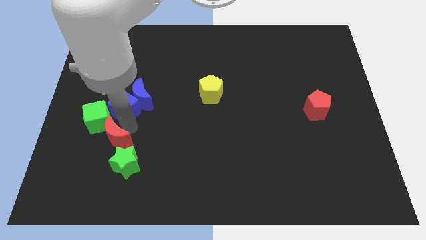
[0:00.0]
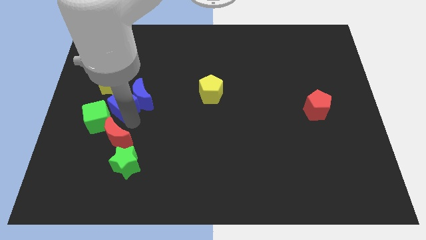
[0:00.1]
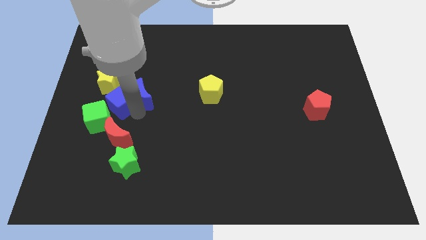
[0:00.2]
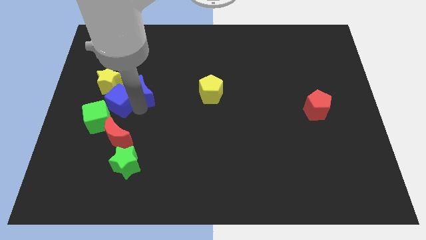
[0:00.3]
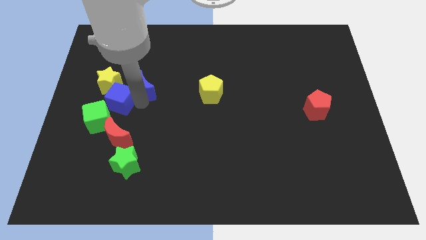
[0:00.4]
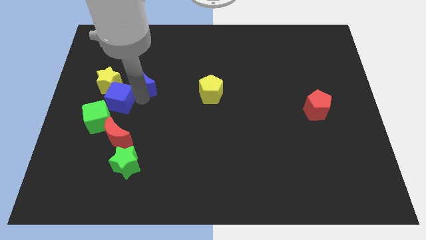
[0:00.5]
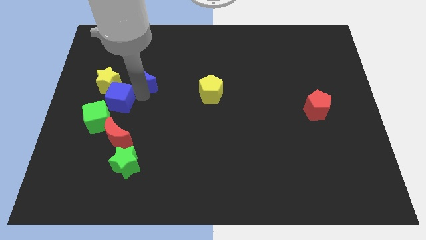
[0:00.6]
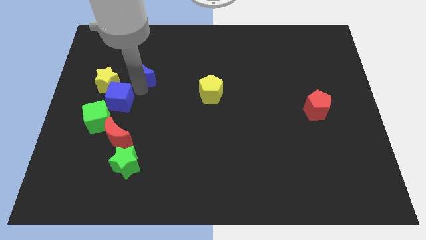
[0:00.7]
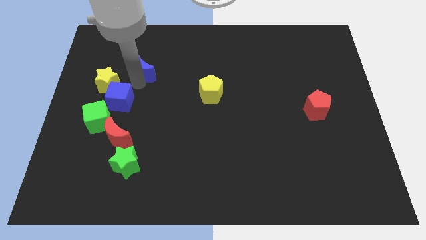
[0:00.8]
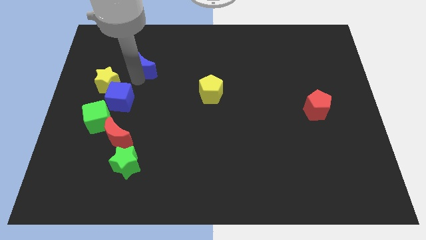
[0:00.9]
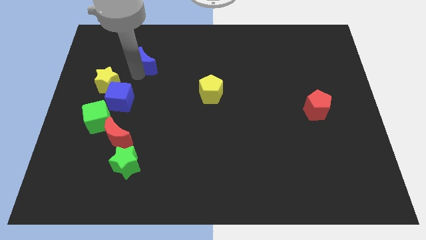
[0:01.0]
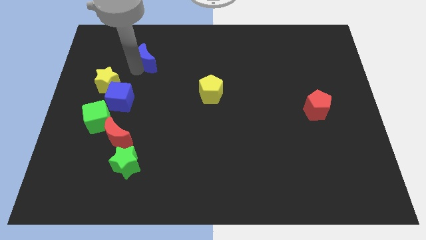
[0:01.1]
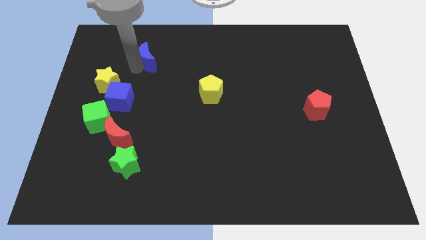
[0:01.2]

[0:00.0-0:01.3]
separate the blue crescent from the blue cube

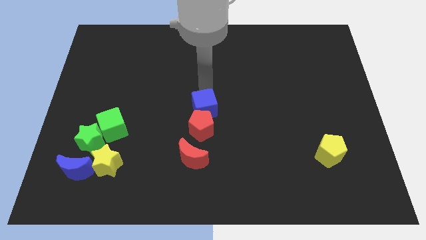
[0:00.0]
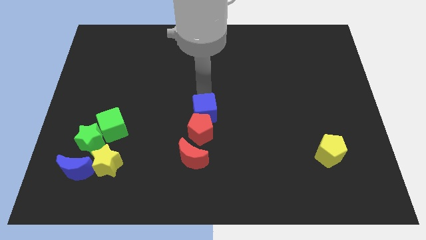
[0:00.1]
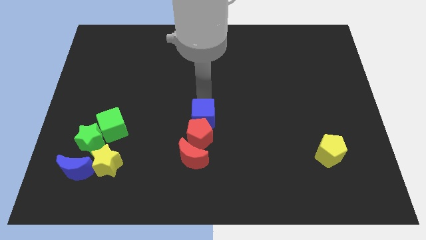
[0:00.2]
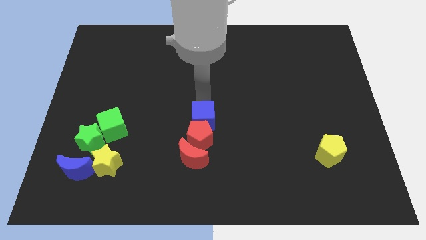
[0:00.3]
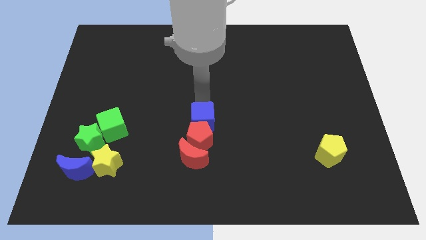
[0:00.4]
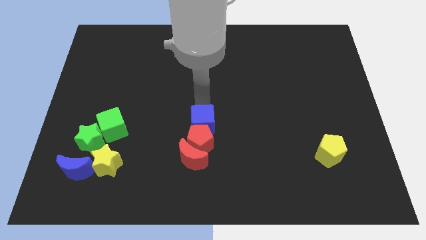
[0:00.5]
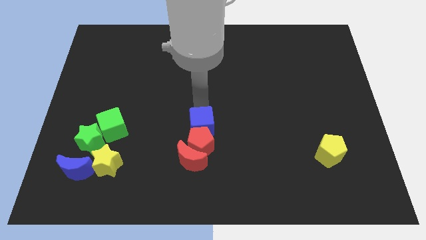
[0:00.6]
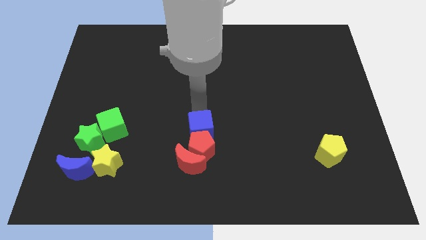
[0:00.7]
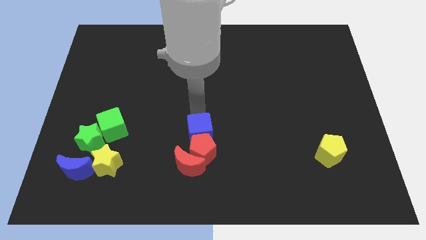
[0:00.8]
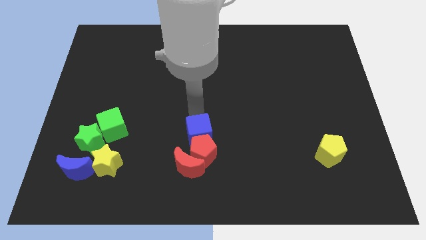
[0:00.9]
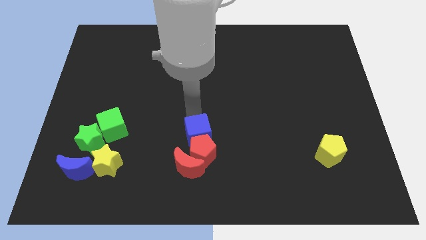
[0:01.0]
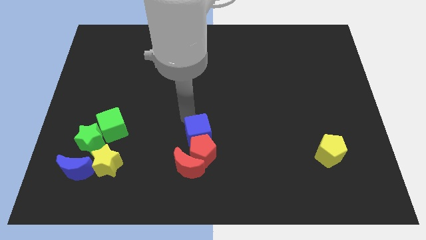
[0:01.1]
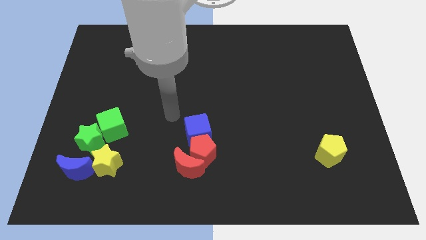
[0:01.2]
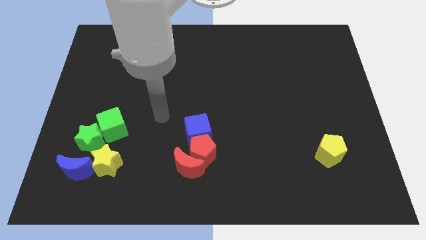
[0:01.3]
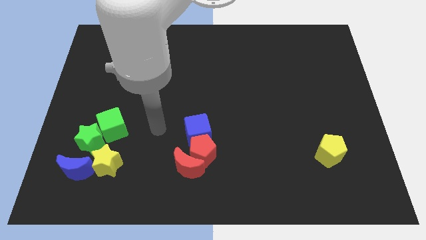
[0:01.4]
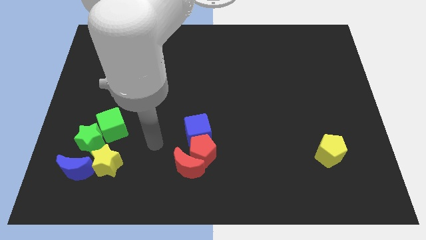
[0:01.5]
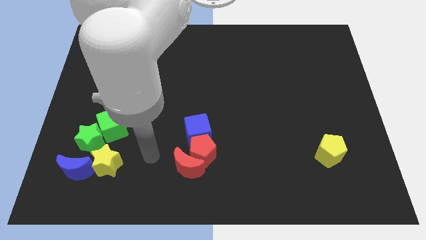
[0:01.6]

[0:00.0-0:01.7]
move the red pentagon and the blue cube into the red moon

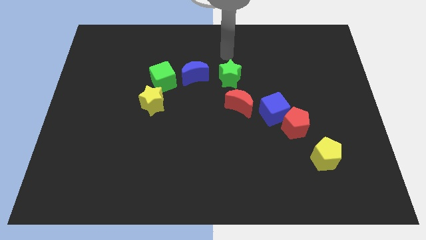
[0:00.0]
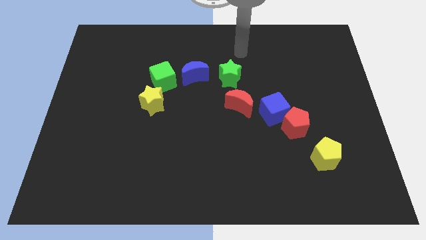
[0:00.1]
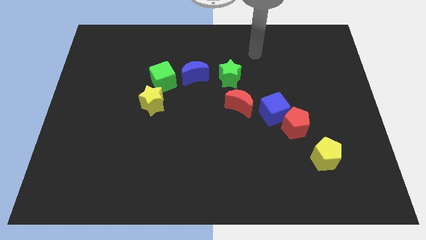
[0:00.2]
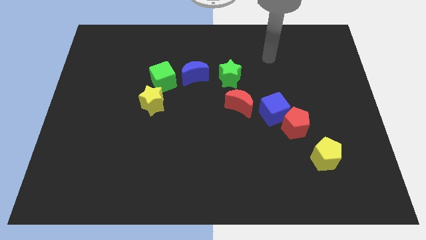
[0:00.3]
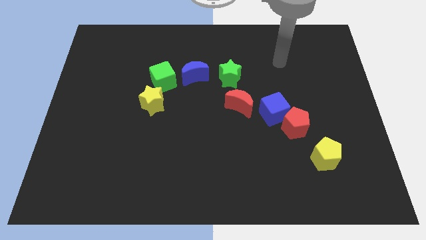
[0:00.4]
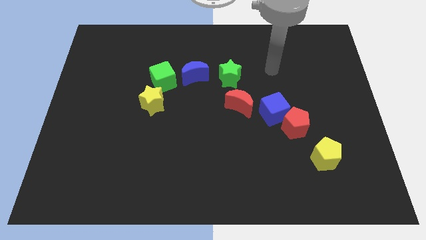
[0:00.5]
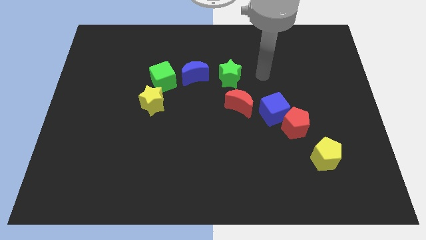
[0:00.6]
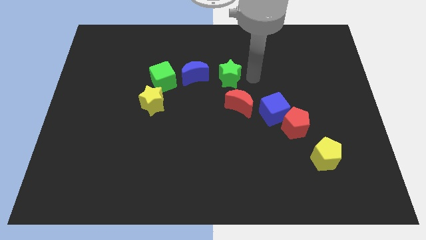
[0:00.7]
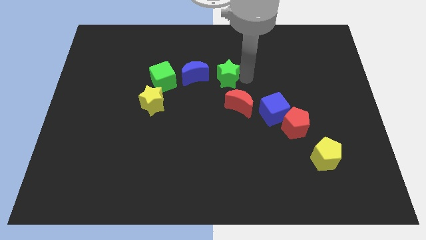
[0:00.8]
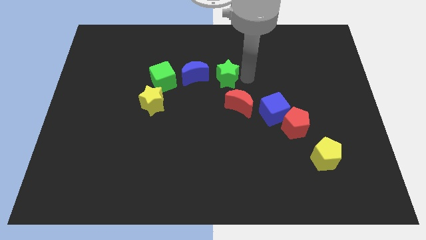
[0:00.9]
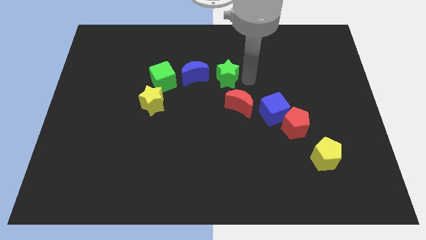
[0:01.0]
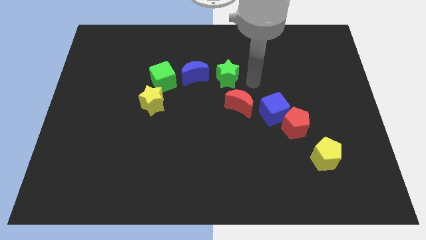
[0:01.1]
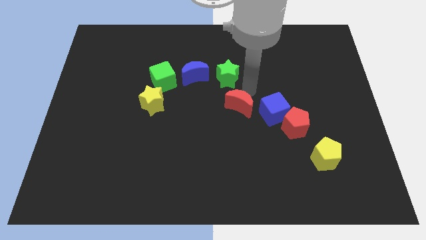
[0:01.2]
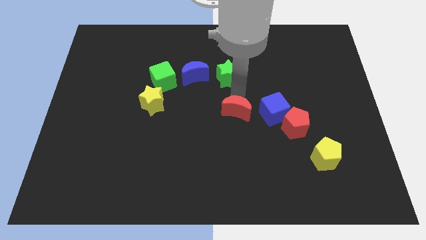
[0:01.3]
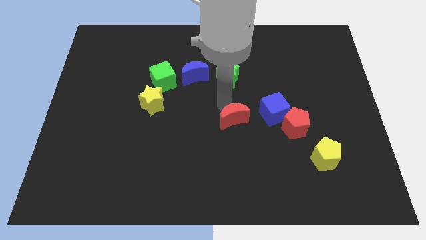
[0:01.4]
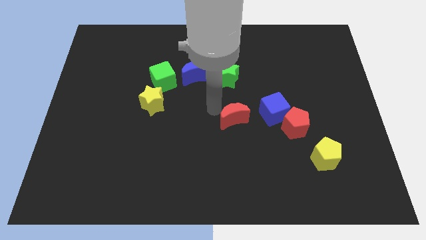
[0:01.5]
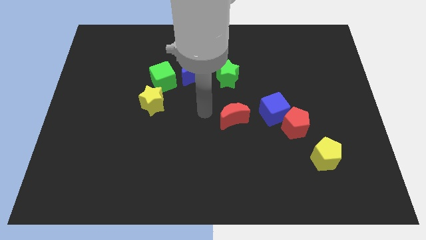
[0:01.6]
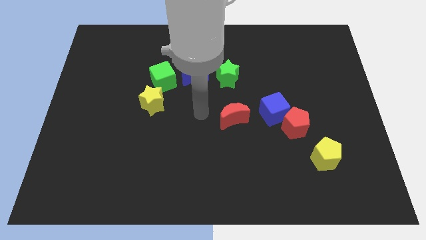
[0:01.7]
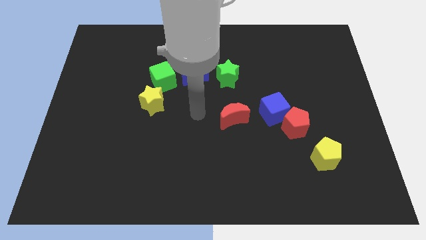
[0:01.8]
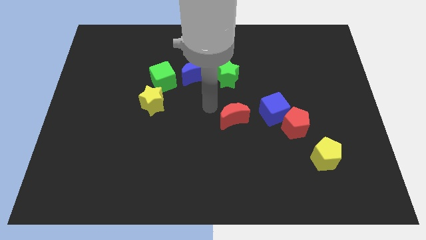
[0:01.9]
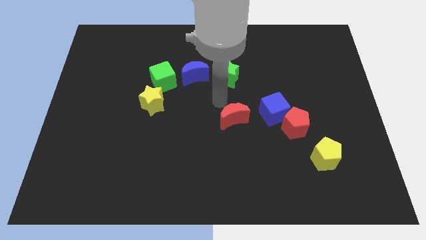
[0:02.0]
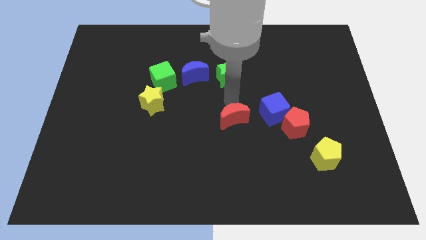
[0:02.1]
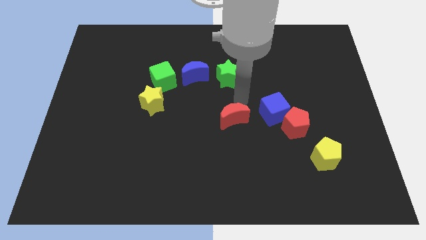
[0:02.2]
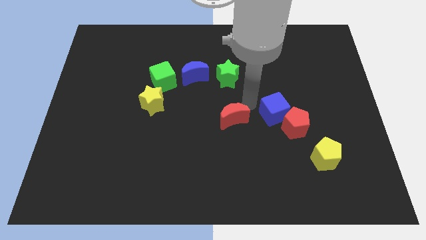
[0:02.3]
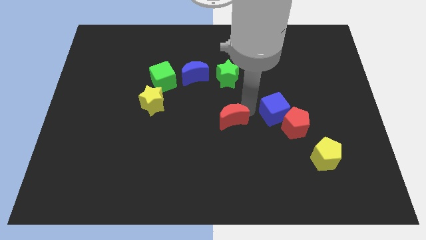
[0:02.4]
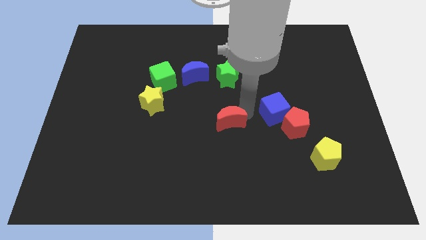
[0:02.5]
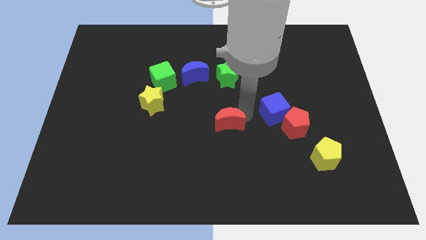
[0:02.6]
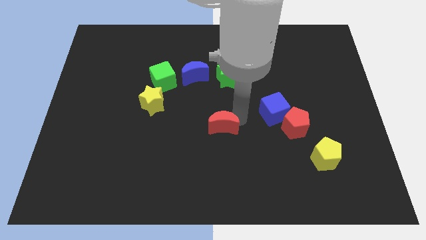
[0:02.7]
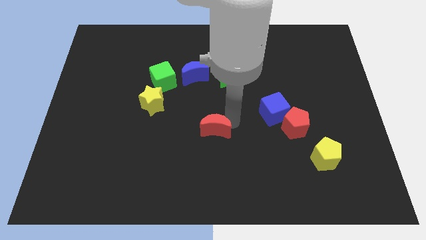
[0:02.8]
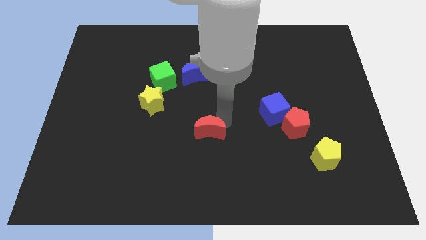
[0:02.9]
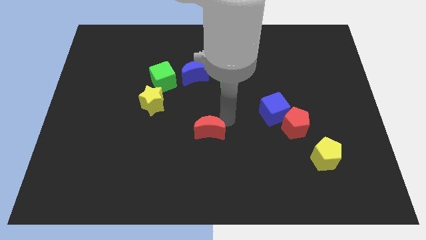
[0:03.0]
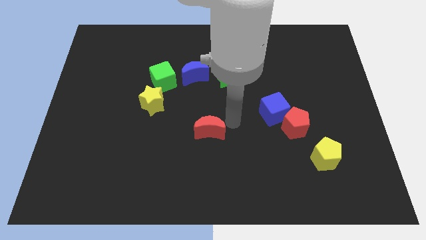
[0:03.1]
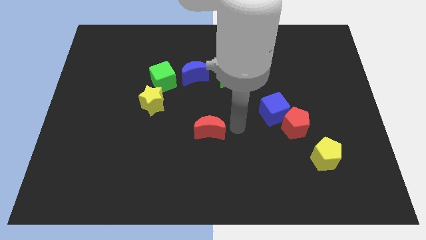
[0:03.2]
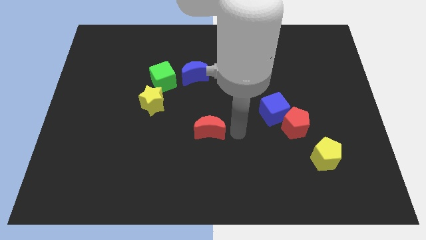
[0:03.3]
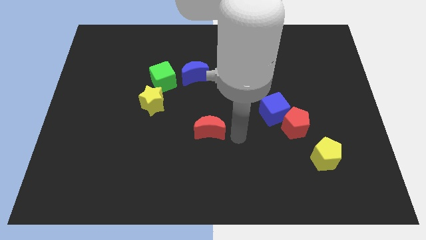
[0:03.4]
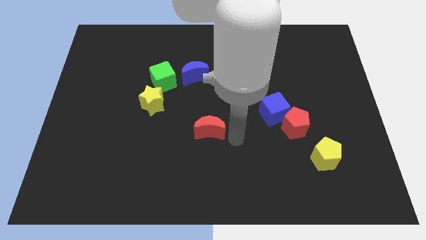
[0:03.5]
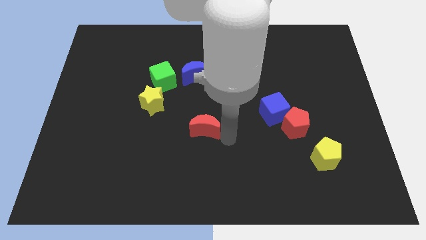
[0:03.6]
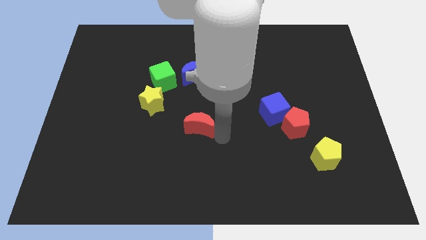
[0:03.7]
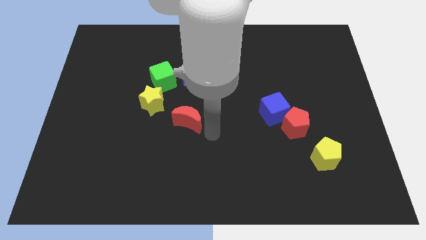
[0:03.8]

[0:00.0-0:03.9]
place the red moon below the blue moon

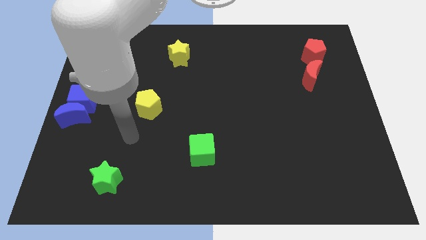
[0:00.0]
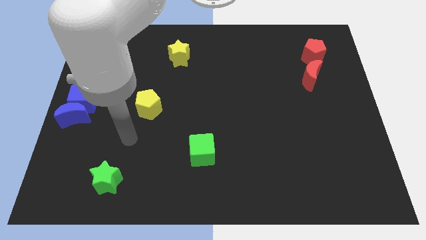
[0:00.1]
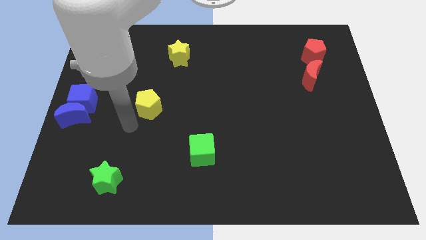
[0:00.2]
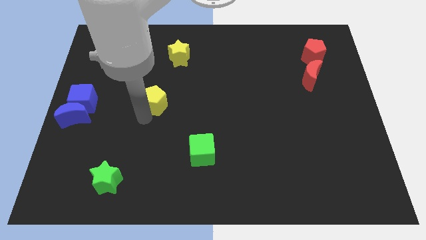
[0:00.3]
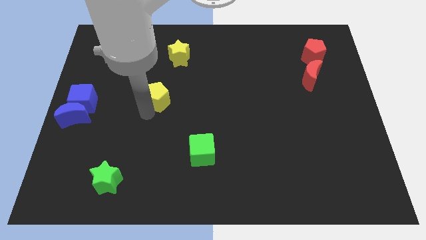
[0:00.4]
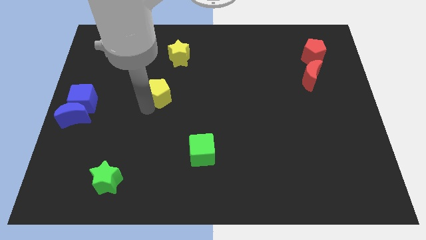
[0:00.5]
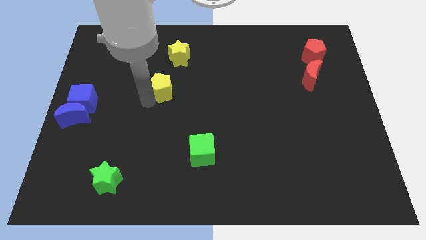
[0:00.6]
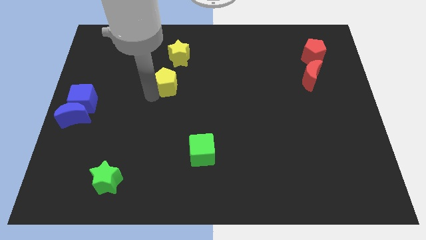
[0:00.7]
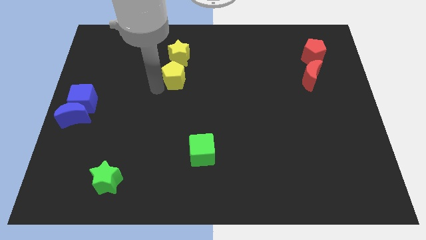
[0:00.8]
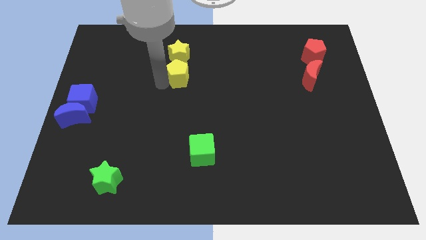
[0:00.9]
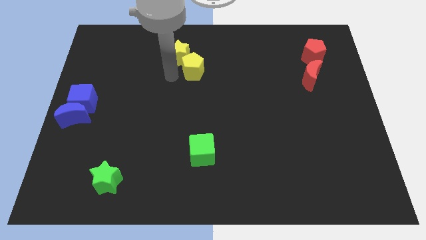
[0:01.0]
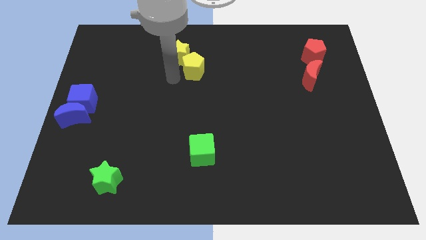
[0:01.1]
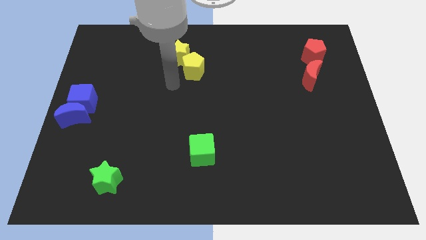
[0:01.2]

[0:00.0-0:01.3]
push yellow pentagon diagonally below yellow star

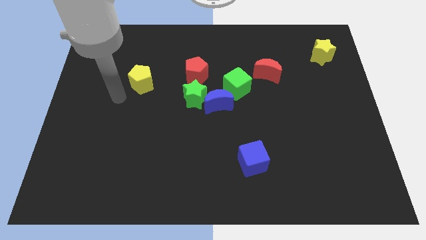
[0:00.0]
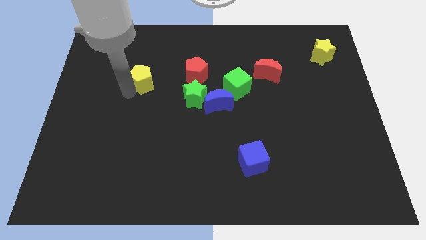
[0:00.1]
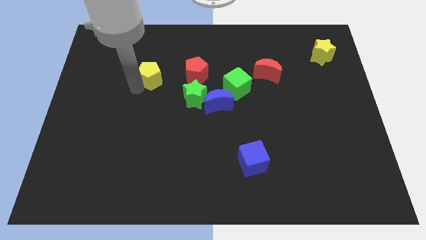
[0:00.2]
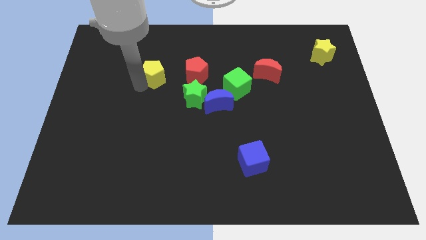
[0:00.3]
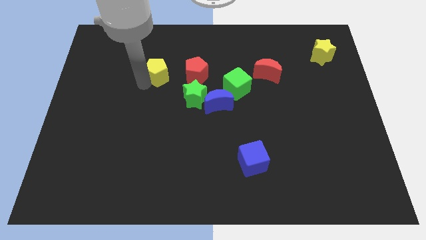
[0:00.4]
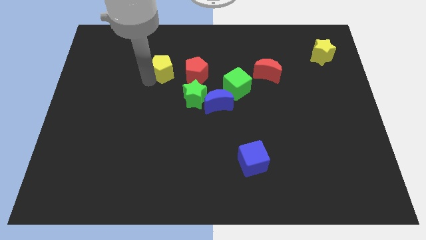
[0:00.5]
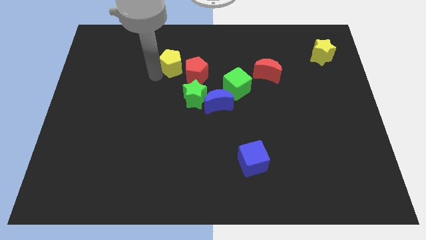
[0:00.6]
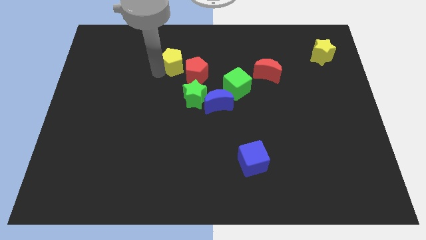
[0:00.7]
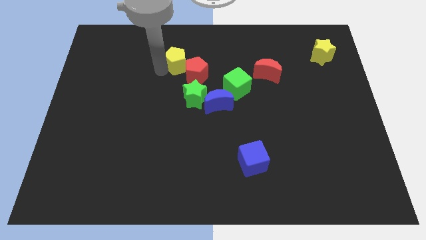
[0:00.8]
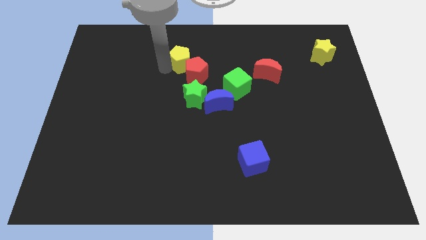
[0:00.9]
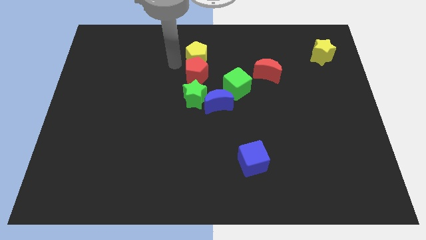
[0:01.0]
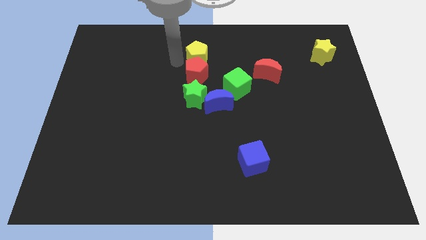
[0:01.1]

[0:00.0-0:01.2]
place the yellow pentagon at the top of the red pentagon
